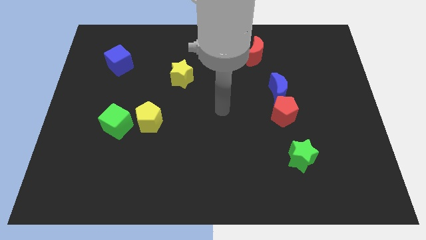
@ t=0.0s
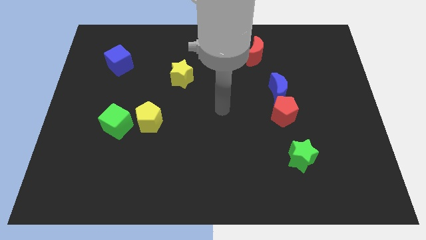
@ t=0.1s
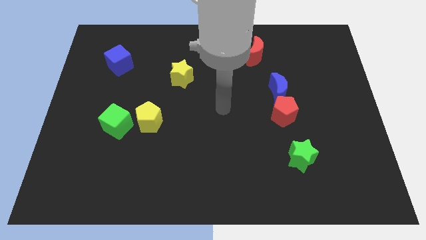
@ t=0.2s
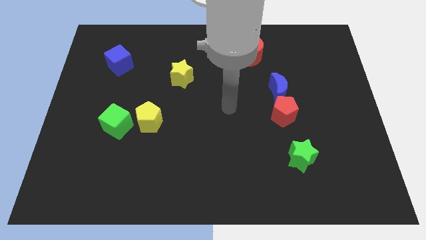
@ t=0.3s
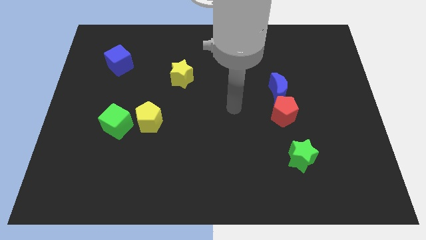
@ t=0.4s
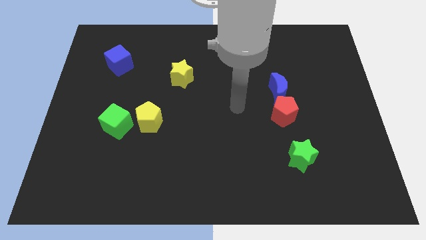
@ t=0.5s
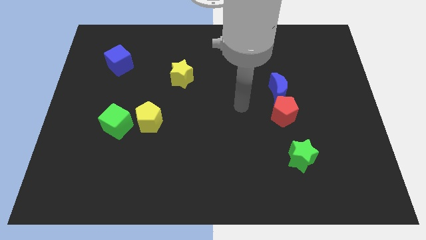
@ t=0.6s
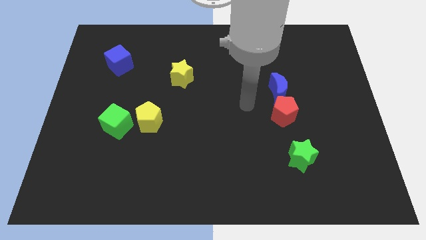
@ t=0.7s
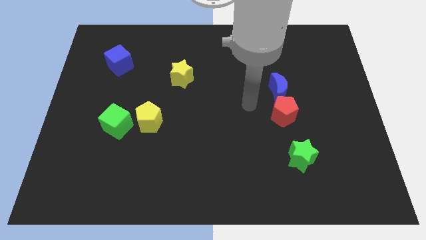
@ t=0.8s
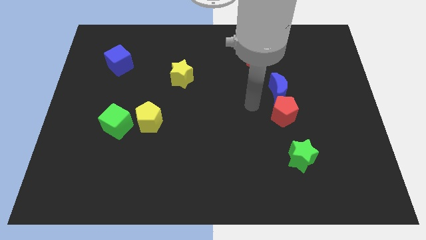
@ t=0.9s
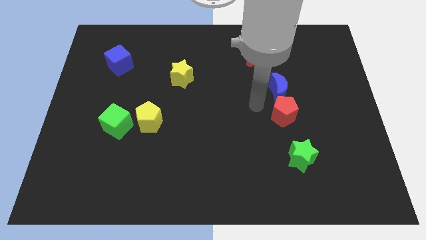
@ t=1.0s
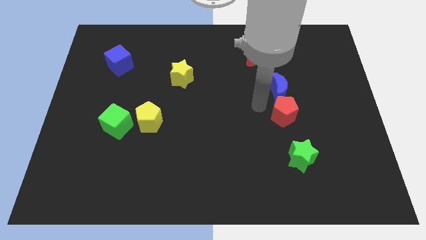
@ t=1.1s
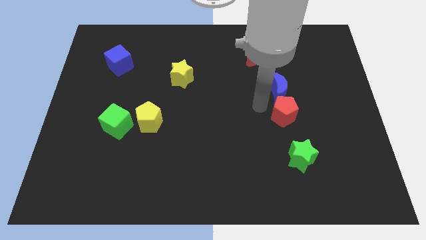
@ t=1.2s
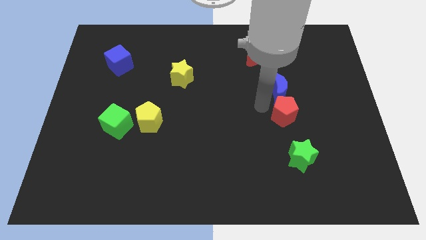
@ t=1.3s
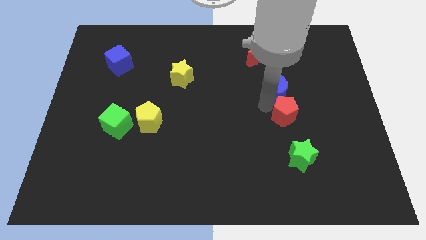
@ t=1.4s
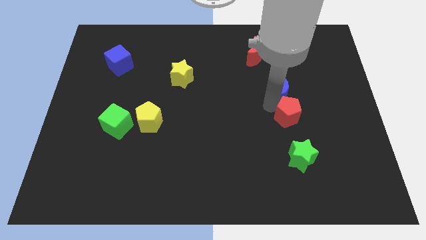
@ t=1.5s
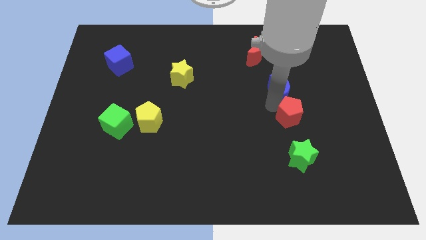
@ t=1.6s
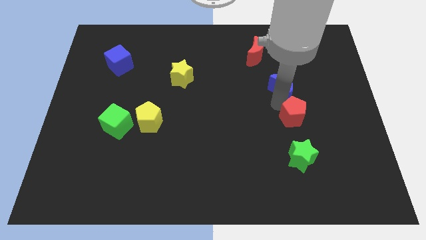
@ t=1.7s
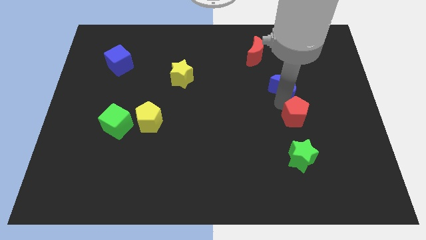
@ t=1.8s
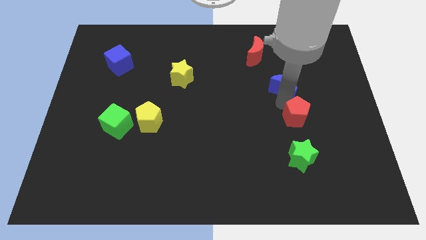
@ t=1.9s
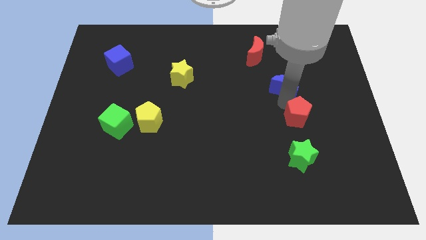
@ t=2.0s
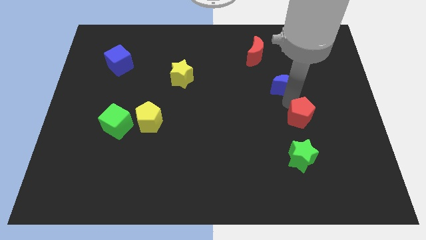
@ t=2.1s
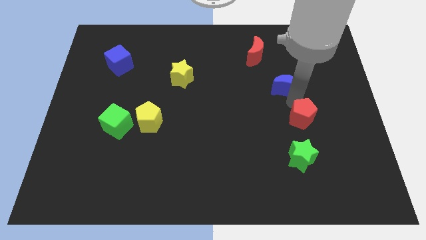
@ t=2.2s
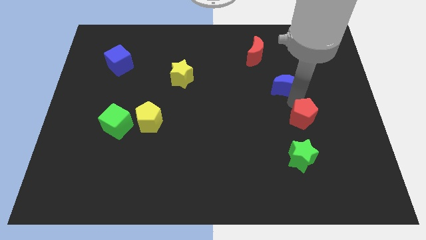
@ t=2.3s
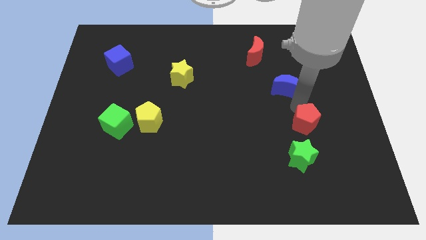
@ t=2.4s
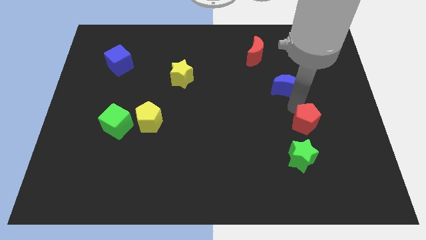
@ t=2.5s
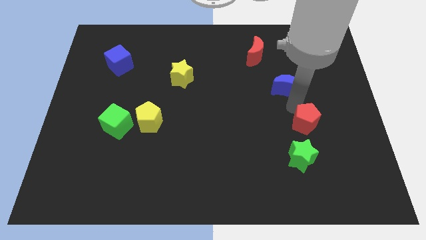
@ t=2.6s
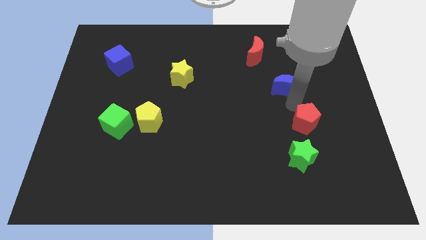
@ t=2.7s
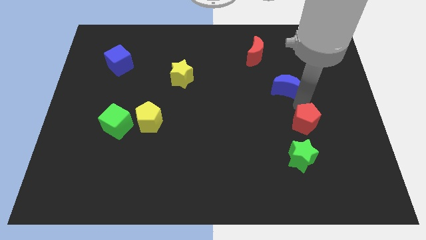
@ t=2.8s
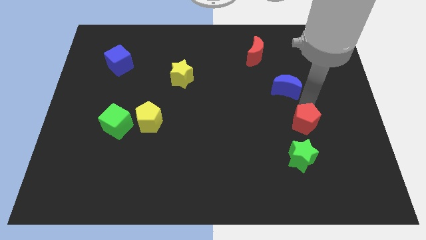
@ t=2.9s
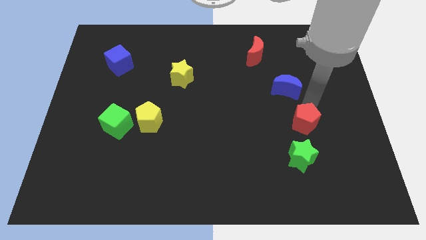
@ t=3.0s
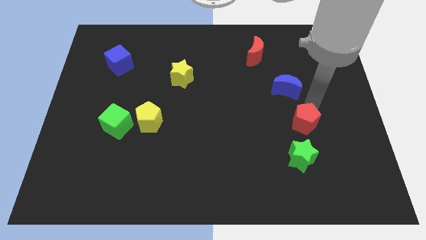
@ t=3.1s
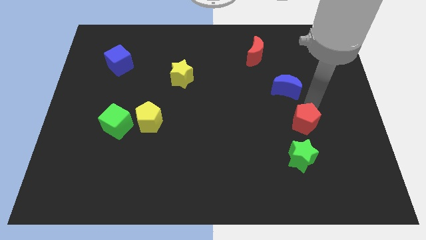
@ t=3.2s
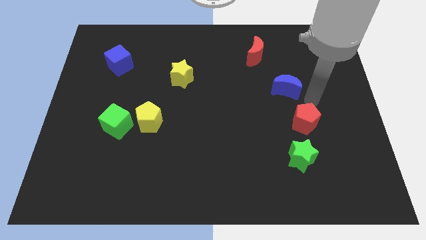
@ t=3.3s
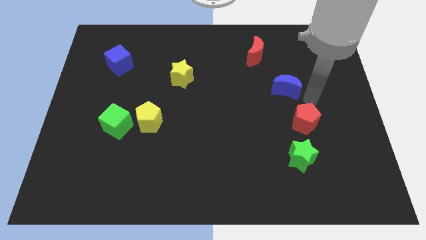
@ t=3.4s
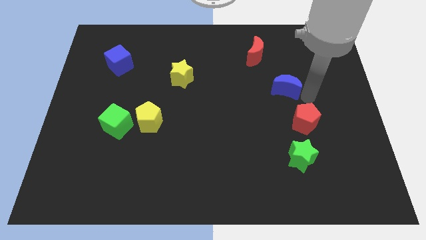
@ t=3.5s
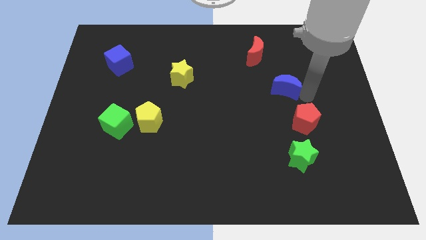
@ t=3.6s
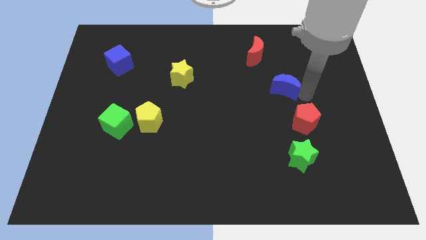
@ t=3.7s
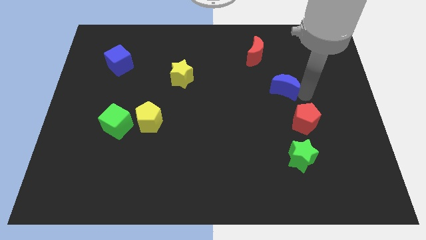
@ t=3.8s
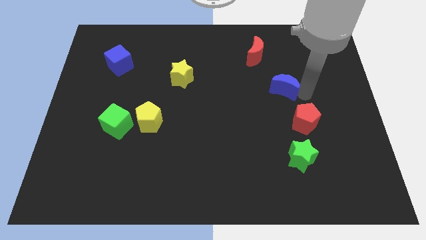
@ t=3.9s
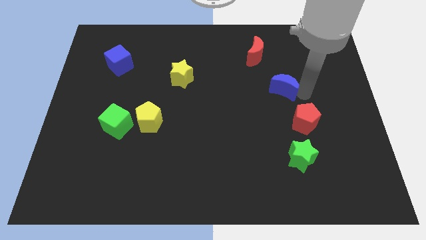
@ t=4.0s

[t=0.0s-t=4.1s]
separate the red pentagon and blue crescent

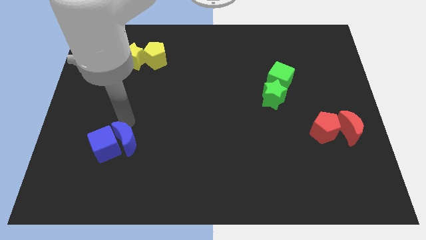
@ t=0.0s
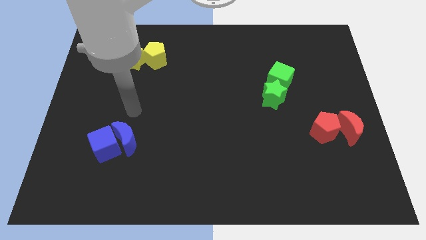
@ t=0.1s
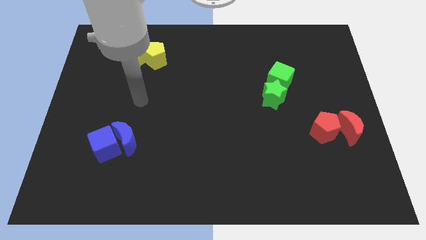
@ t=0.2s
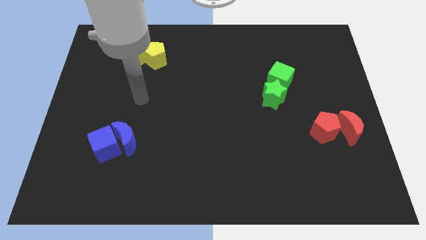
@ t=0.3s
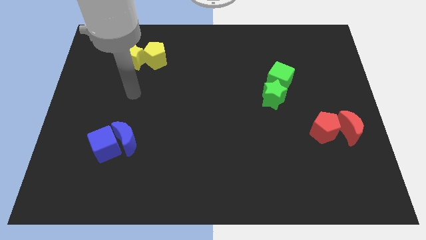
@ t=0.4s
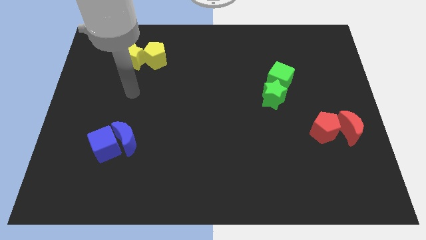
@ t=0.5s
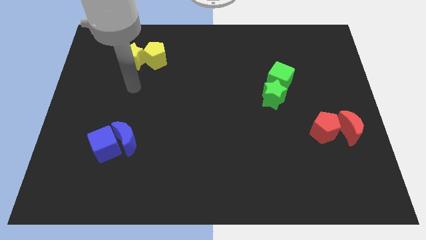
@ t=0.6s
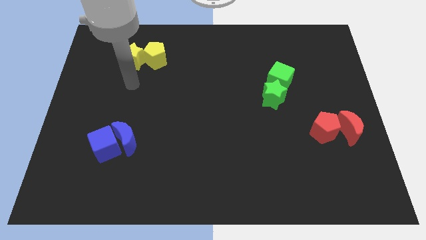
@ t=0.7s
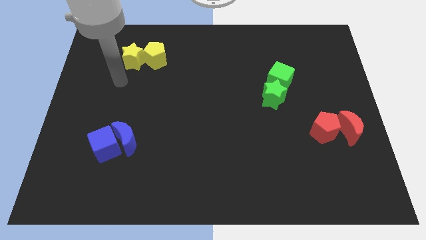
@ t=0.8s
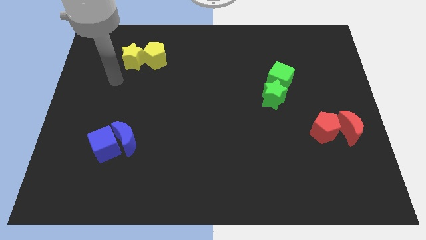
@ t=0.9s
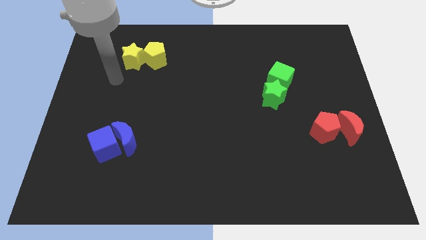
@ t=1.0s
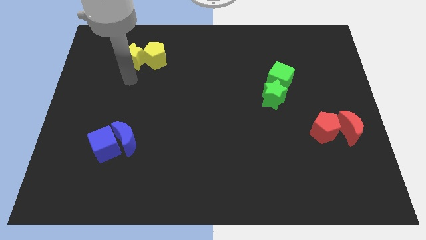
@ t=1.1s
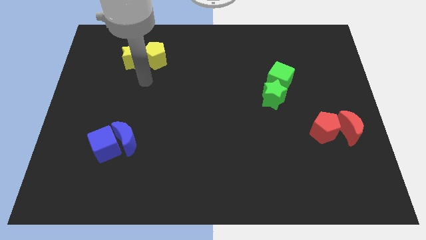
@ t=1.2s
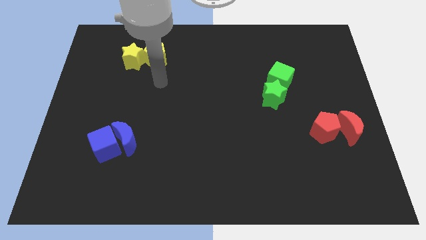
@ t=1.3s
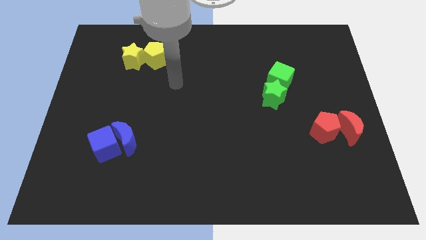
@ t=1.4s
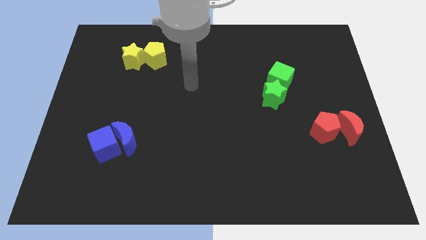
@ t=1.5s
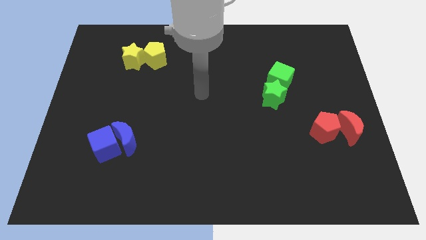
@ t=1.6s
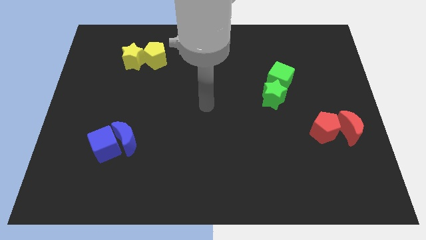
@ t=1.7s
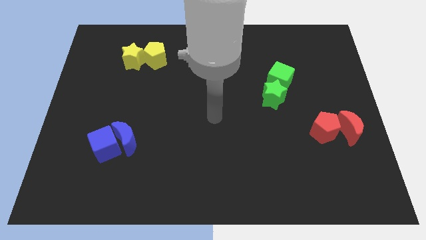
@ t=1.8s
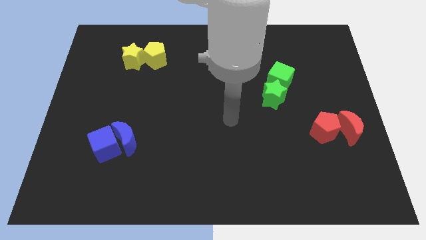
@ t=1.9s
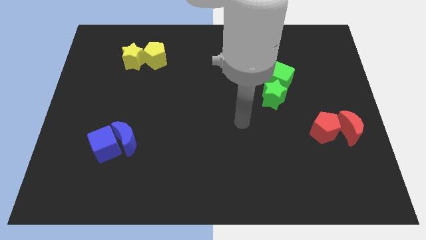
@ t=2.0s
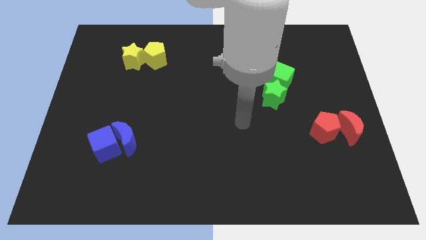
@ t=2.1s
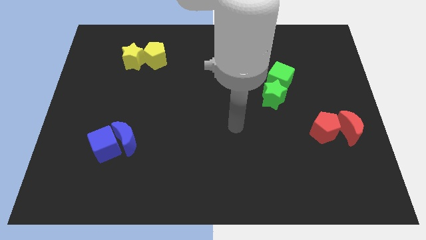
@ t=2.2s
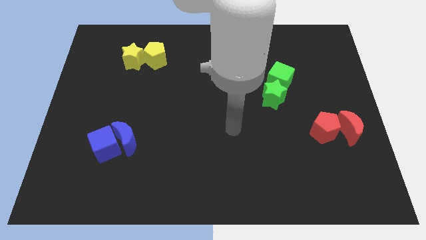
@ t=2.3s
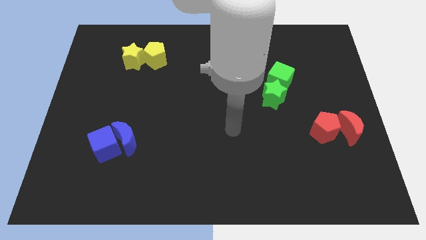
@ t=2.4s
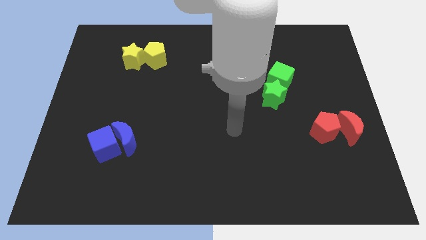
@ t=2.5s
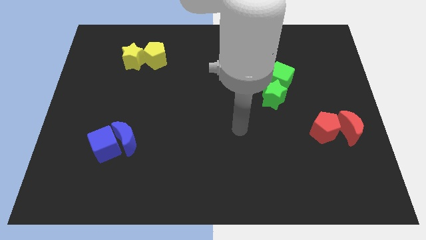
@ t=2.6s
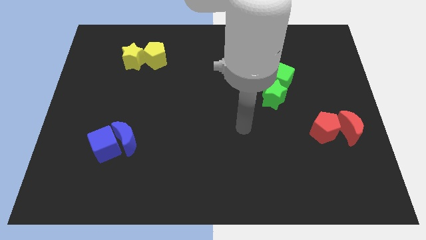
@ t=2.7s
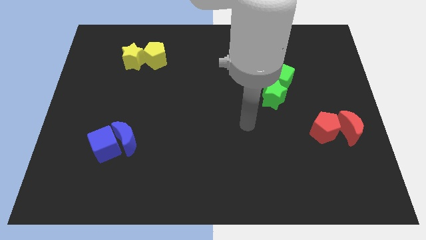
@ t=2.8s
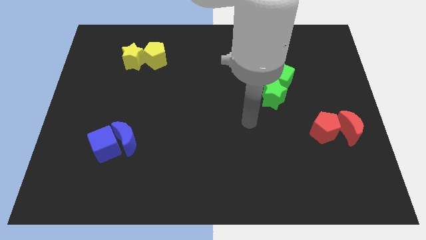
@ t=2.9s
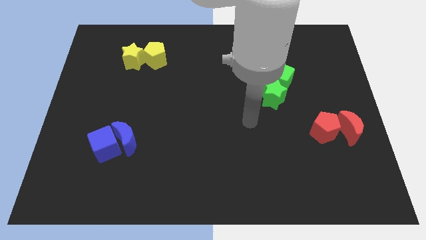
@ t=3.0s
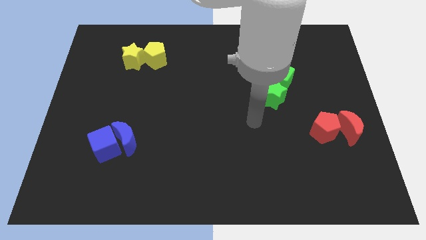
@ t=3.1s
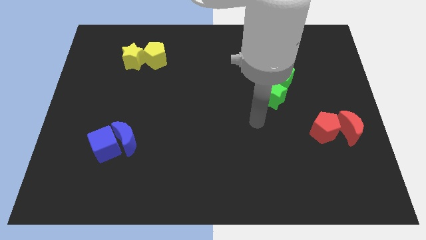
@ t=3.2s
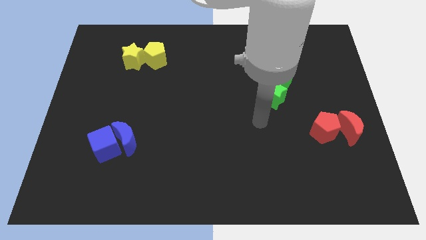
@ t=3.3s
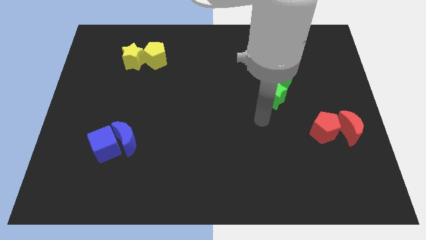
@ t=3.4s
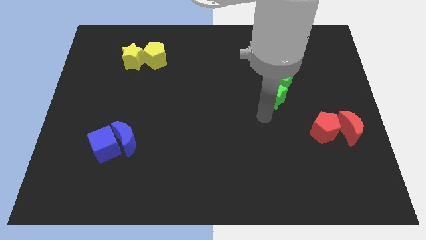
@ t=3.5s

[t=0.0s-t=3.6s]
move your arm to the bottom of green star

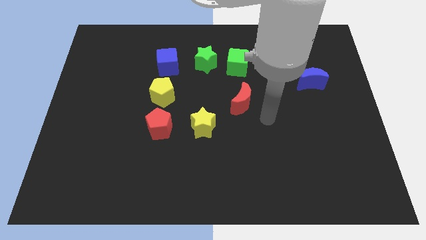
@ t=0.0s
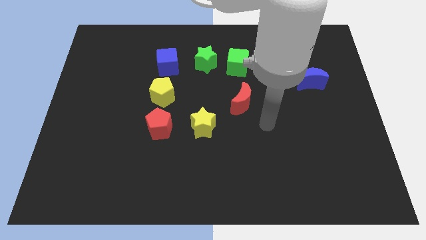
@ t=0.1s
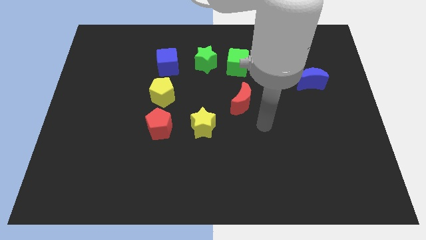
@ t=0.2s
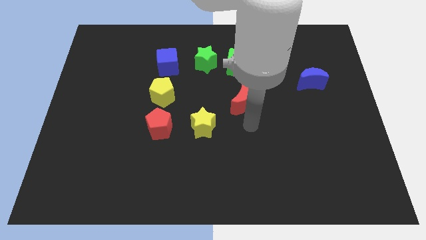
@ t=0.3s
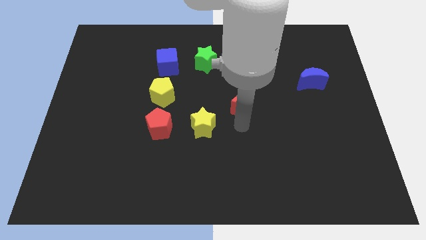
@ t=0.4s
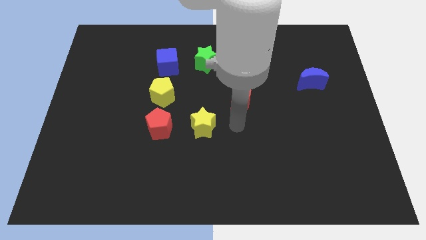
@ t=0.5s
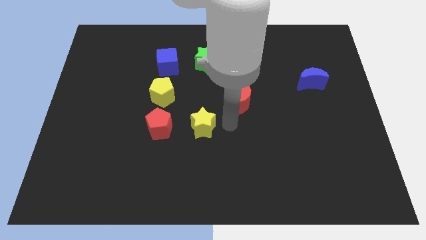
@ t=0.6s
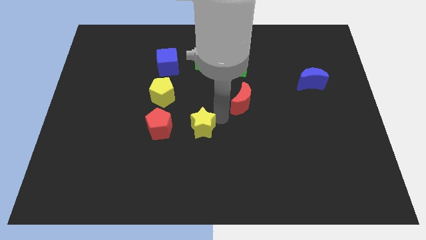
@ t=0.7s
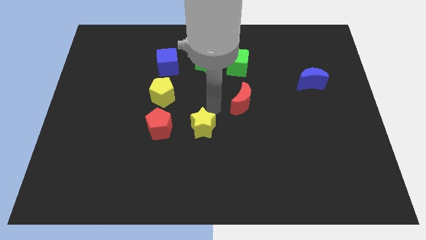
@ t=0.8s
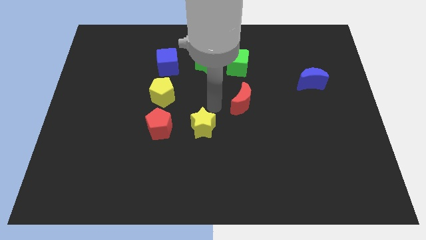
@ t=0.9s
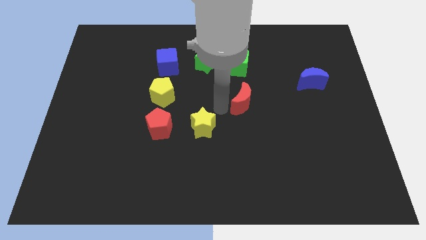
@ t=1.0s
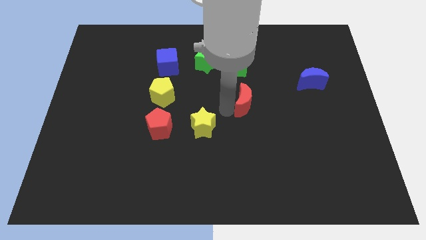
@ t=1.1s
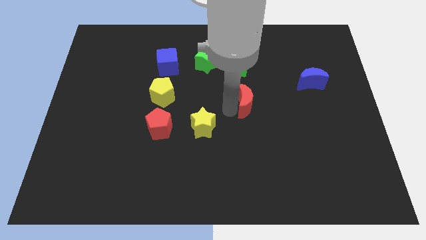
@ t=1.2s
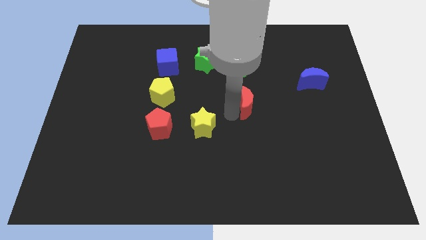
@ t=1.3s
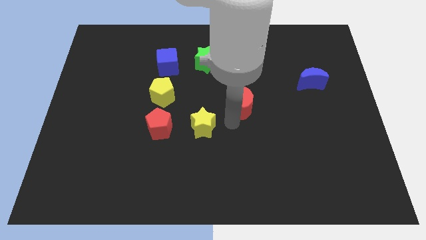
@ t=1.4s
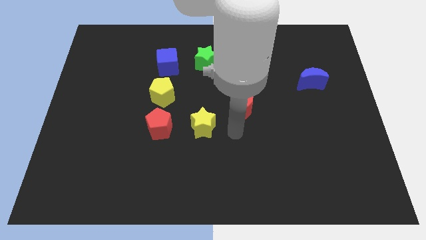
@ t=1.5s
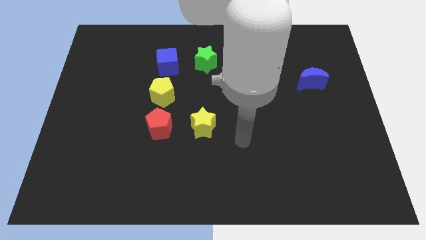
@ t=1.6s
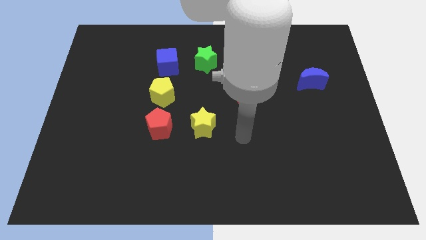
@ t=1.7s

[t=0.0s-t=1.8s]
place red crescent below the green block
